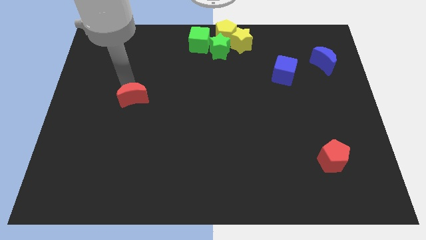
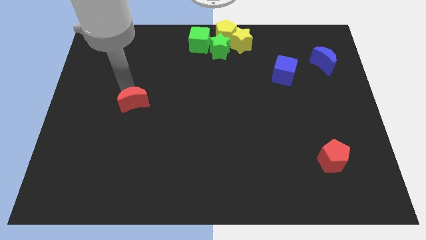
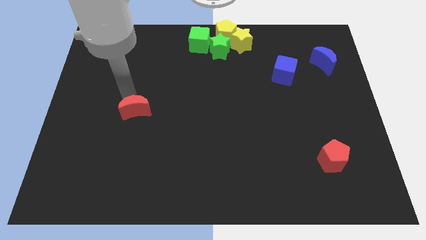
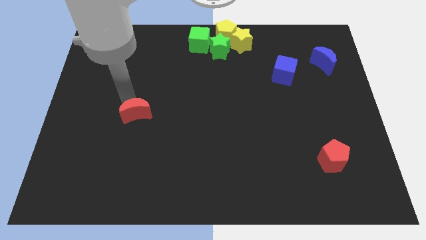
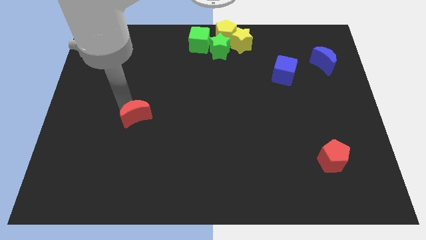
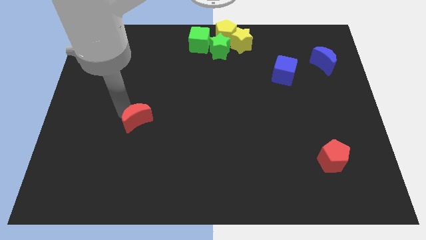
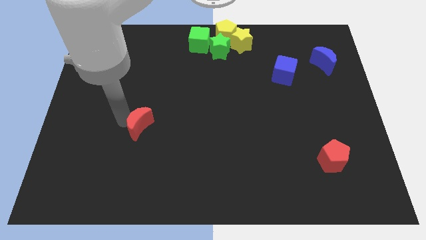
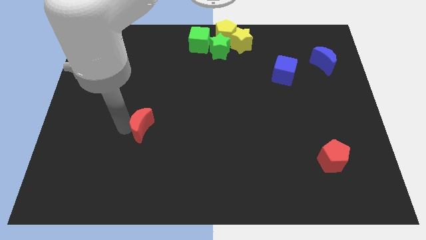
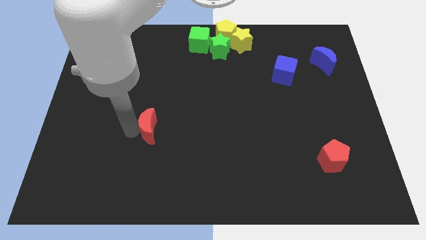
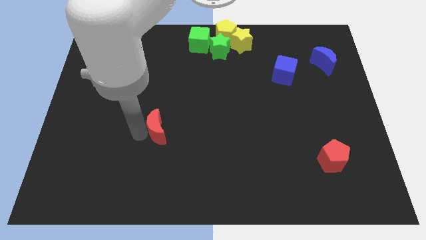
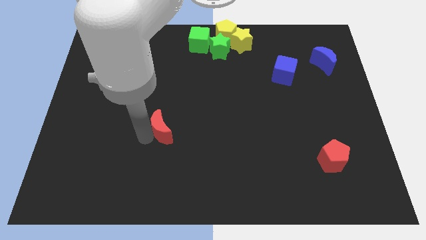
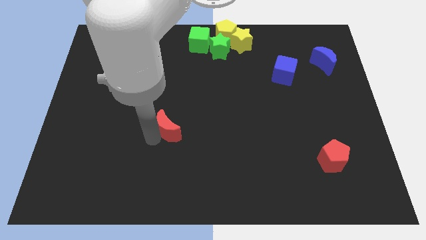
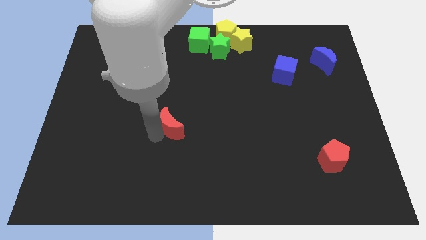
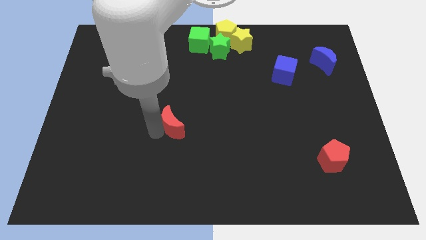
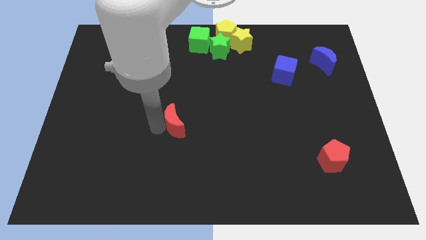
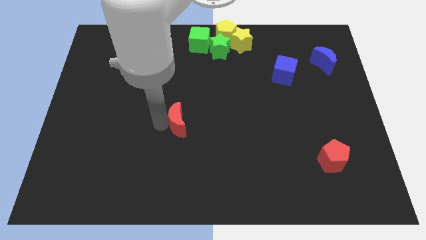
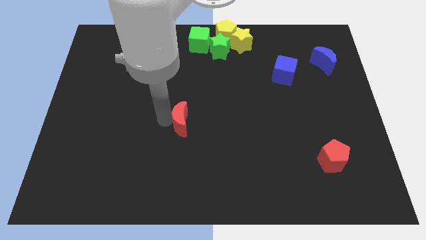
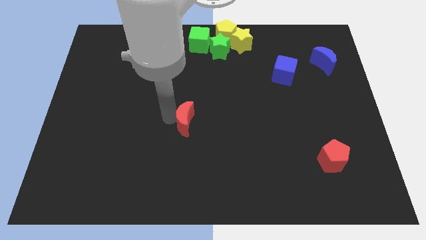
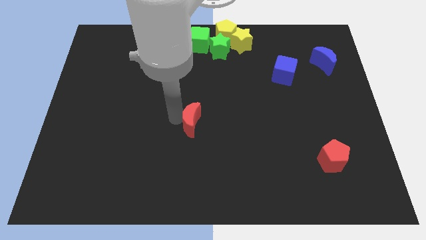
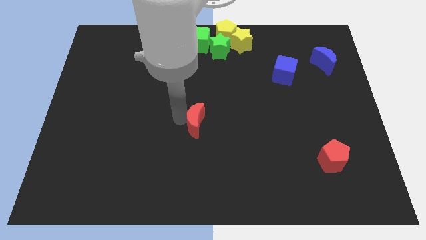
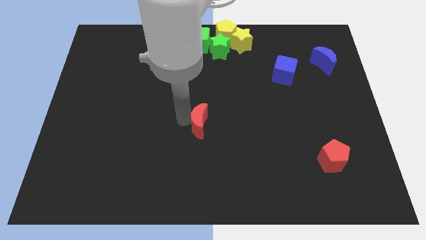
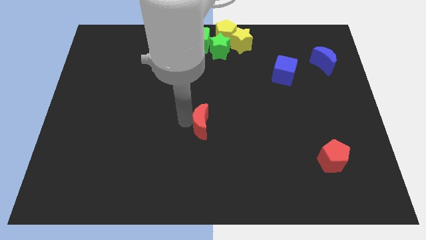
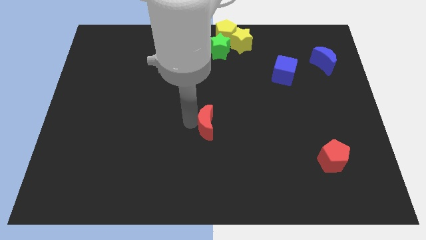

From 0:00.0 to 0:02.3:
move red crescent to the center of the board

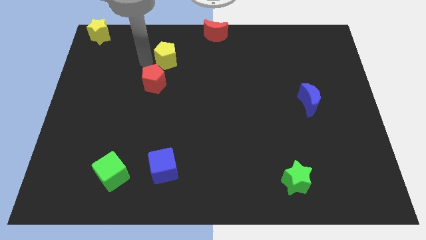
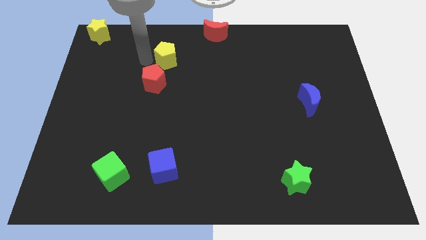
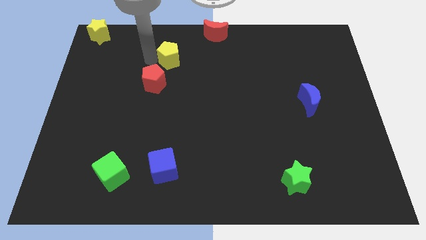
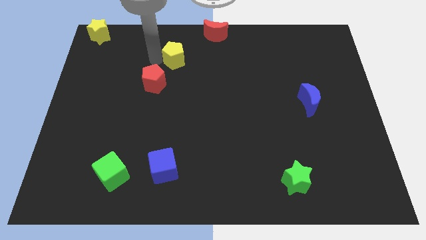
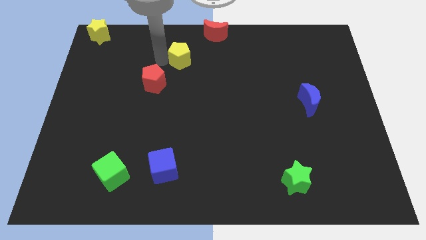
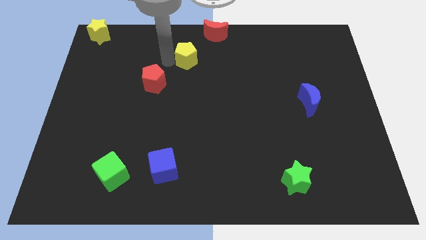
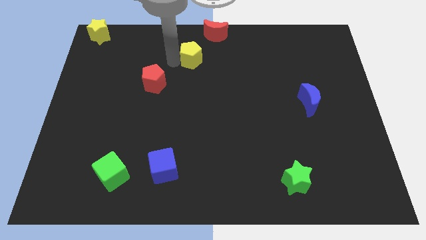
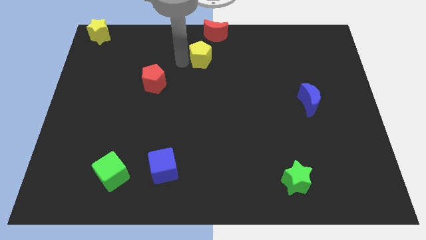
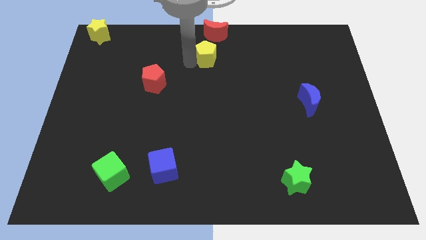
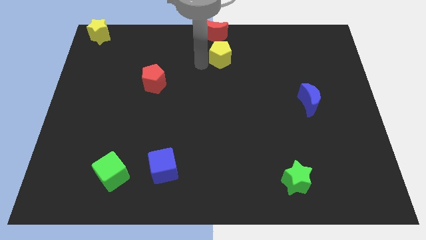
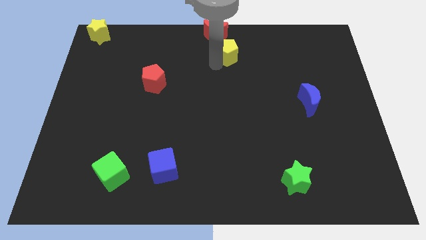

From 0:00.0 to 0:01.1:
place the yellow pentagon below the red crescent

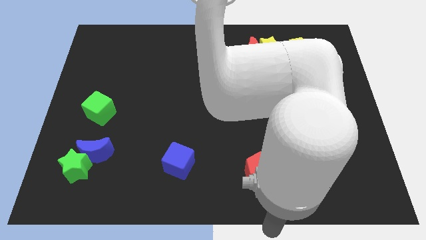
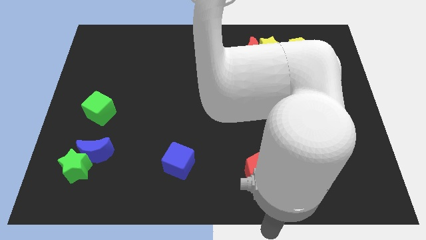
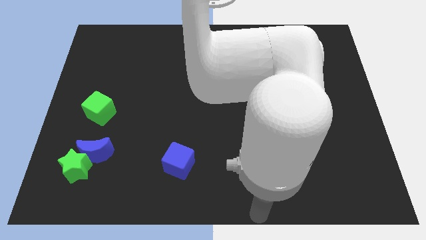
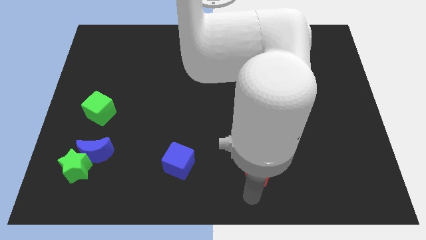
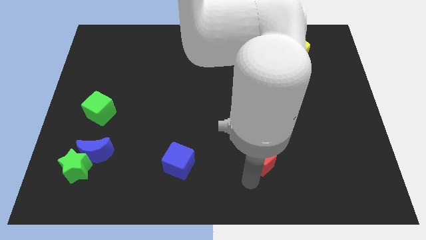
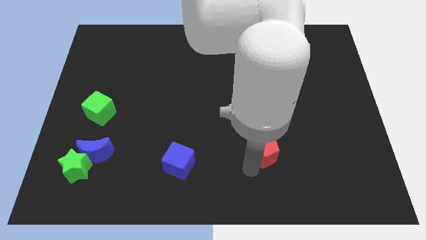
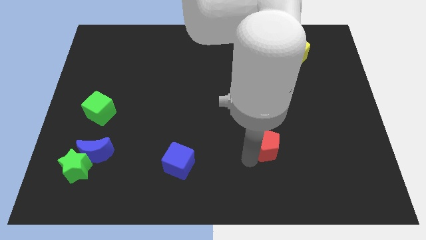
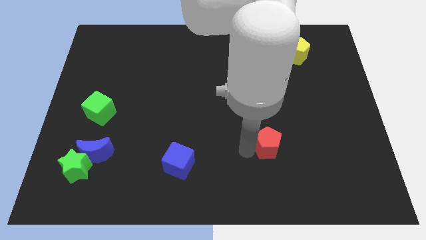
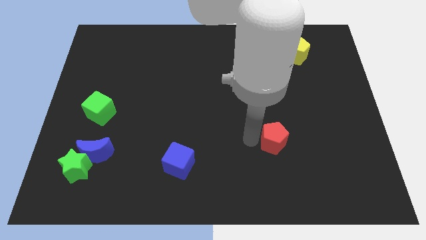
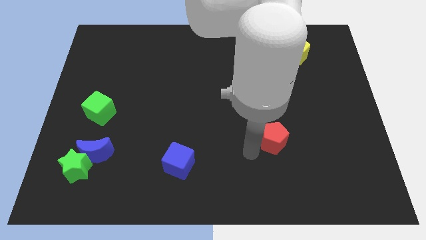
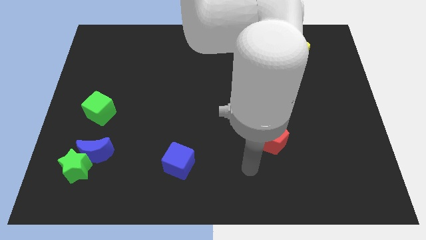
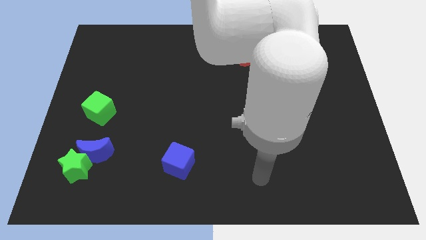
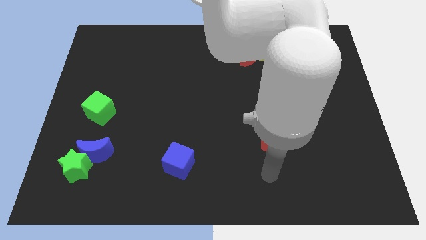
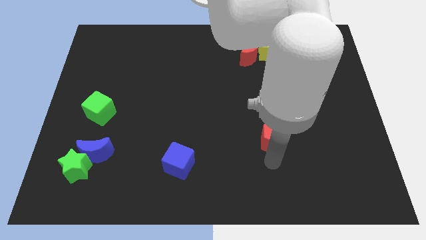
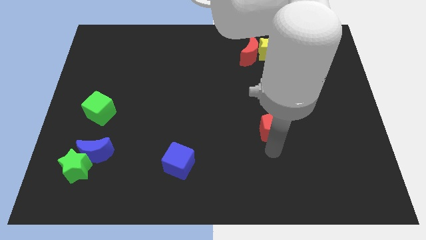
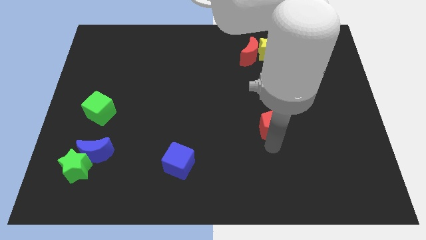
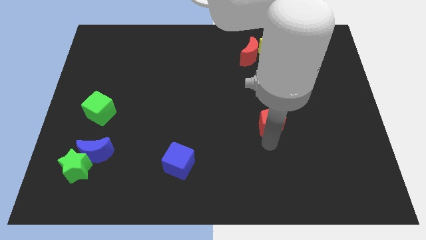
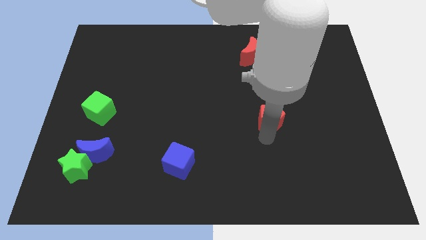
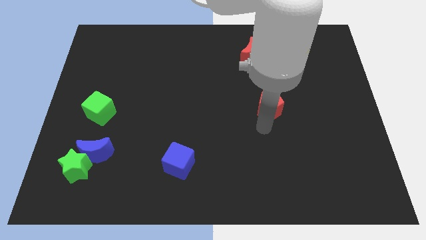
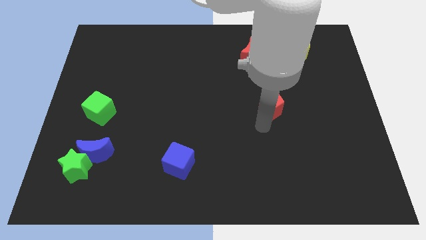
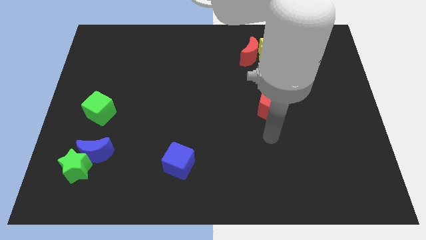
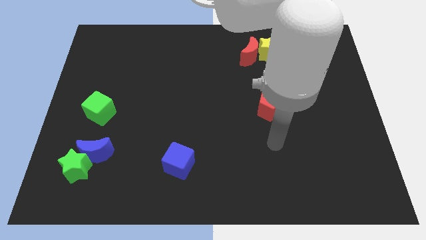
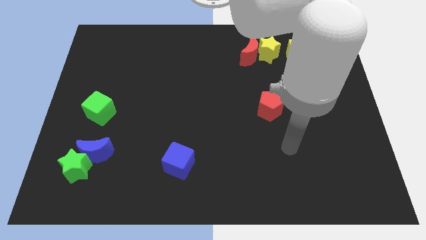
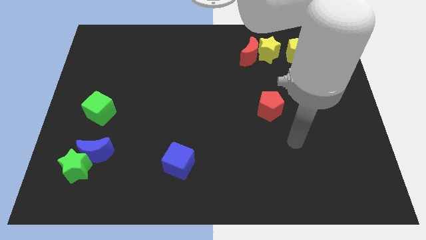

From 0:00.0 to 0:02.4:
move the red pentagon vertically below the yellow star

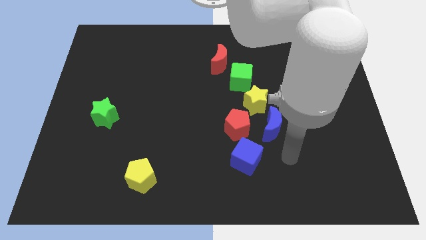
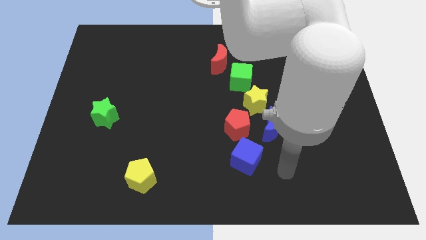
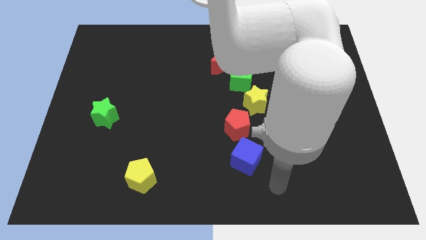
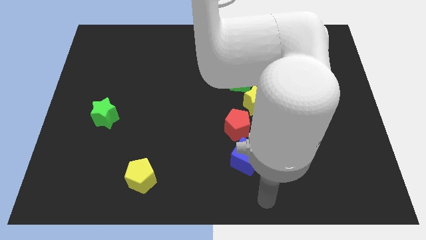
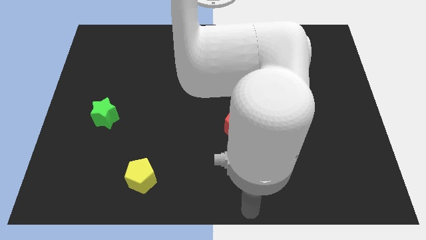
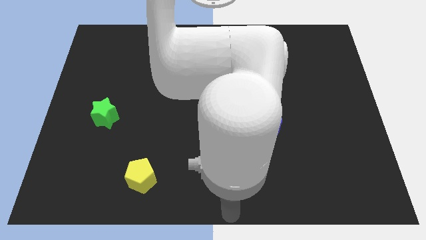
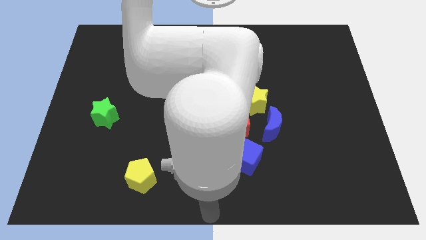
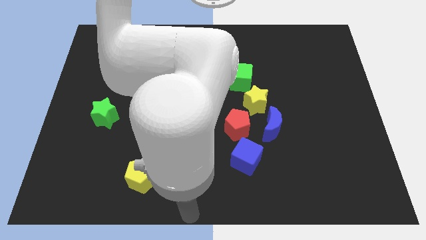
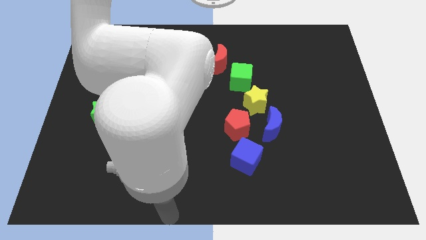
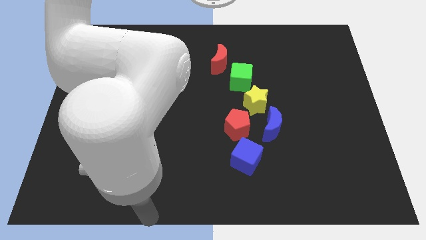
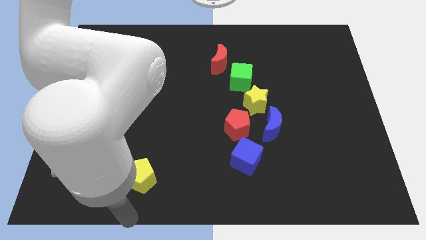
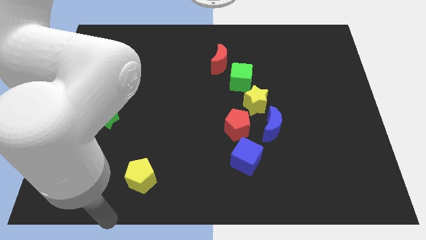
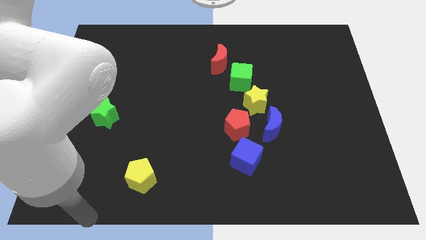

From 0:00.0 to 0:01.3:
move your arm towards the yellow pentagon

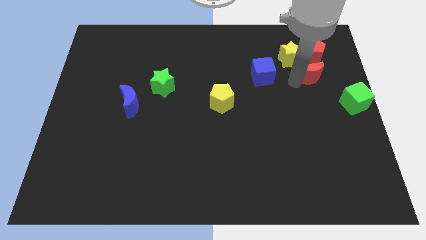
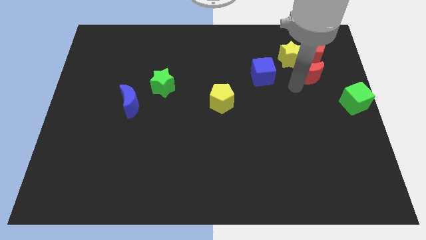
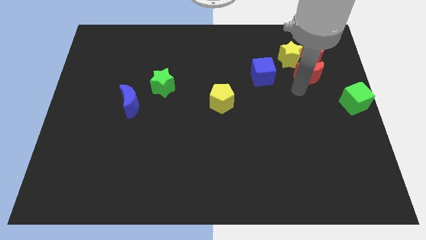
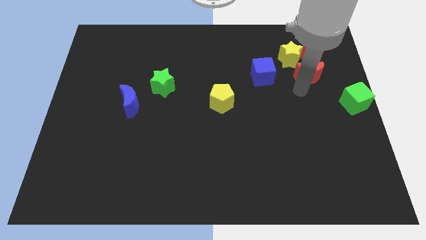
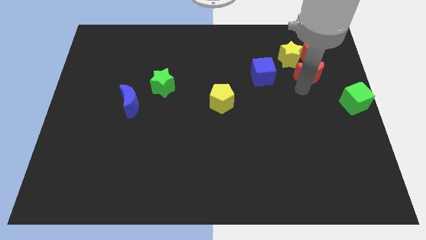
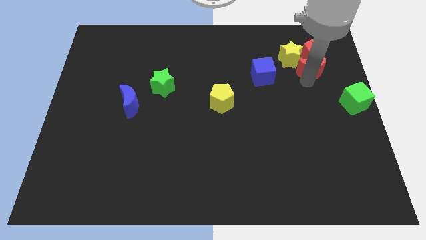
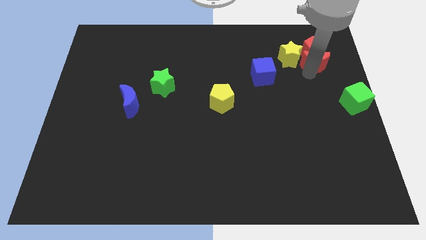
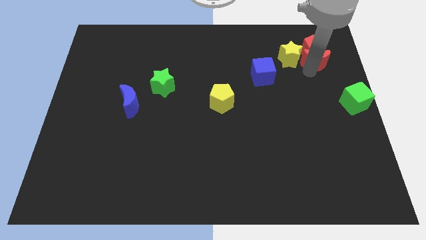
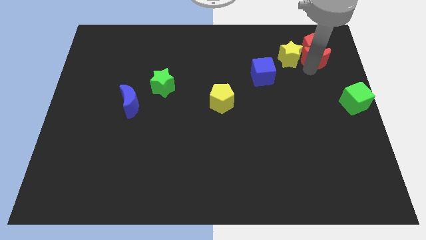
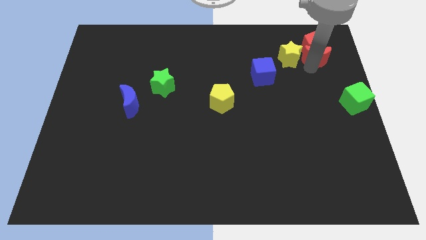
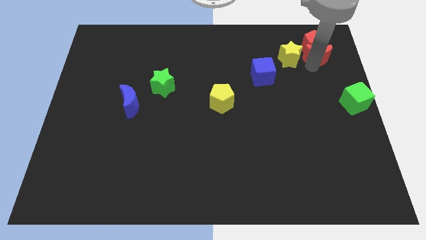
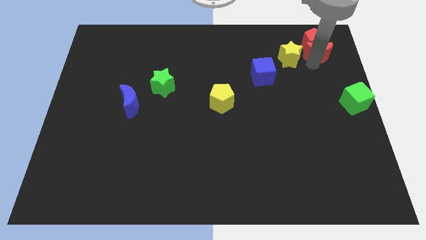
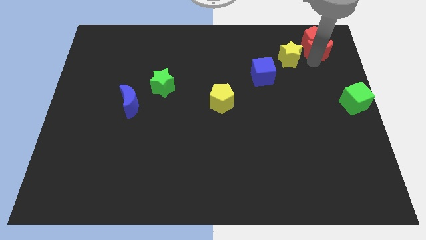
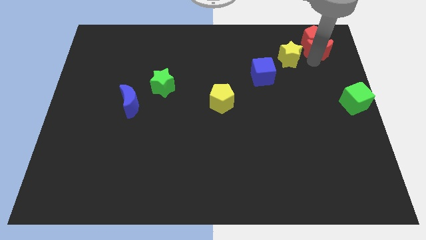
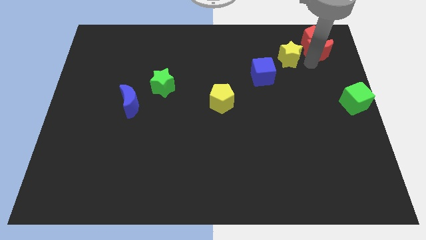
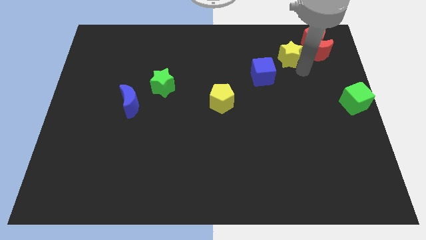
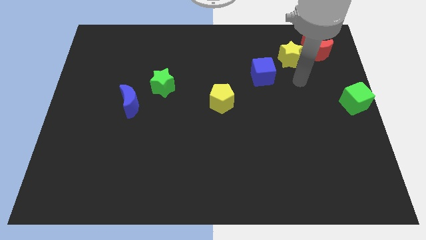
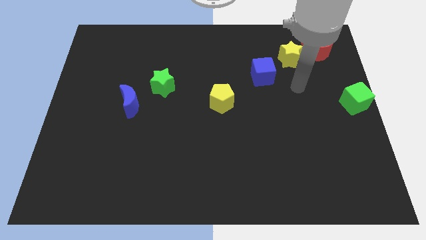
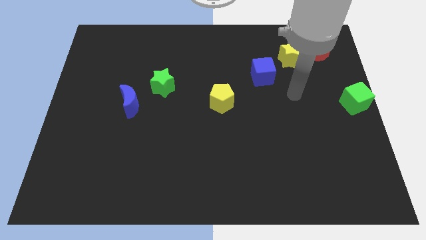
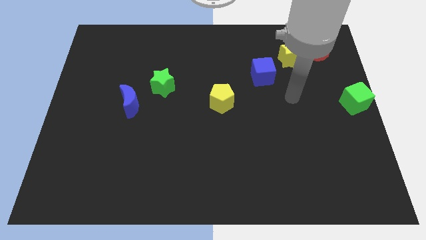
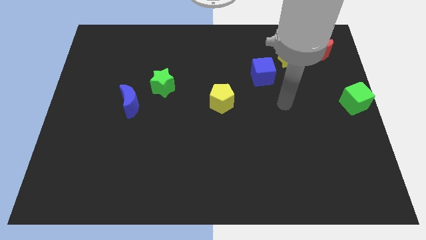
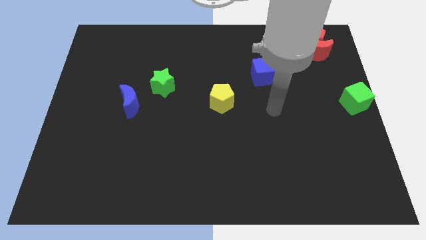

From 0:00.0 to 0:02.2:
move the red crescent and red pentagon to the top of the board
